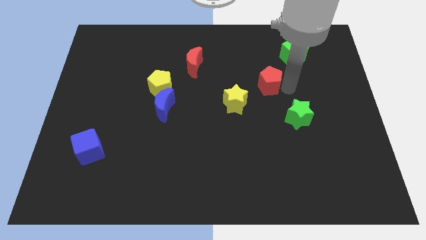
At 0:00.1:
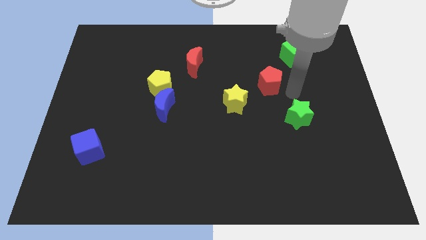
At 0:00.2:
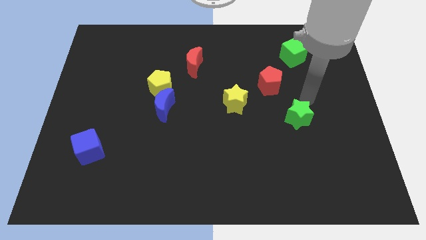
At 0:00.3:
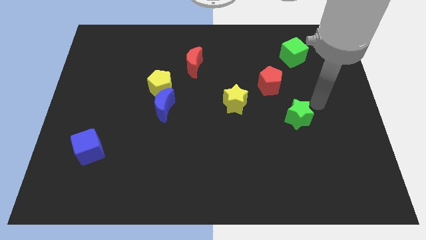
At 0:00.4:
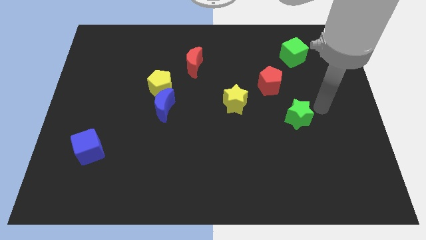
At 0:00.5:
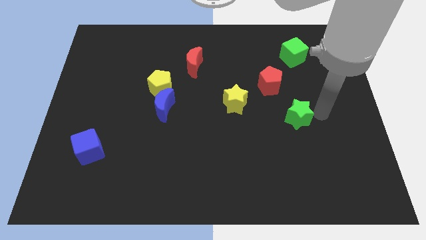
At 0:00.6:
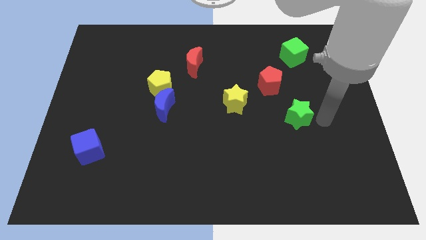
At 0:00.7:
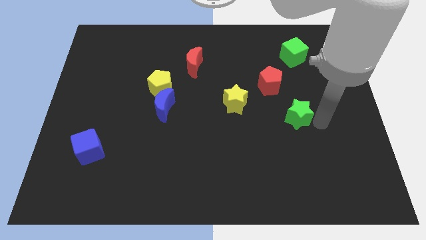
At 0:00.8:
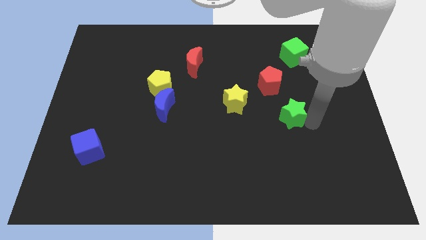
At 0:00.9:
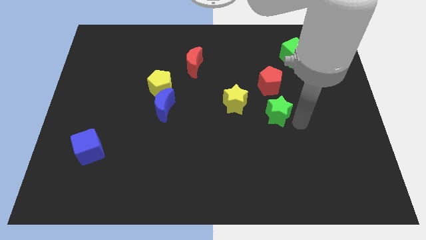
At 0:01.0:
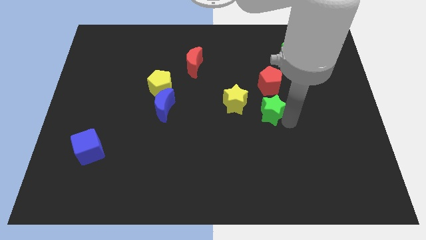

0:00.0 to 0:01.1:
move the green star below the red pentagon

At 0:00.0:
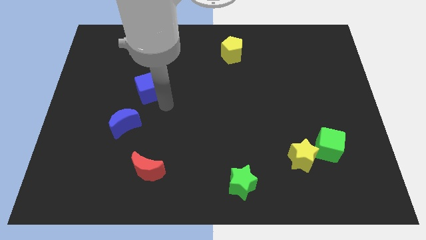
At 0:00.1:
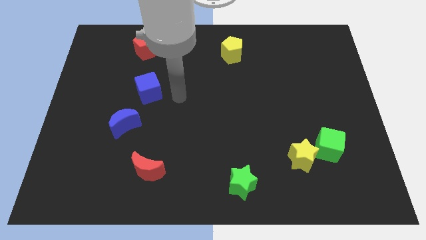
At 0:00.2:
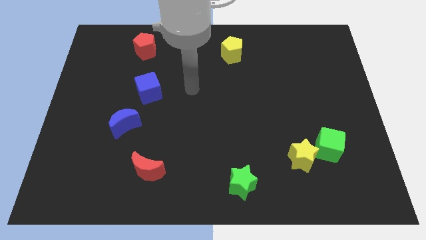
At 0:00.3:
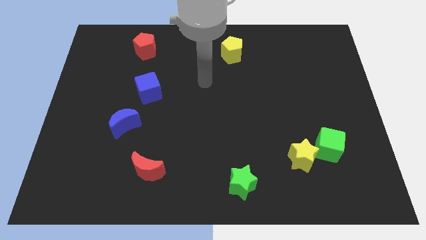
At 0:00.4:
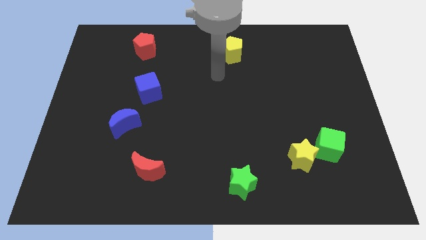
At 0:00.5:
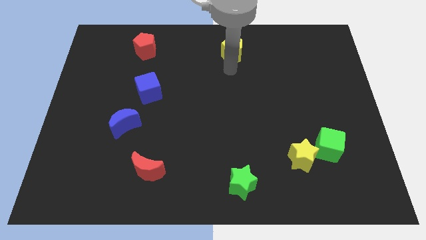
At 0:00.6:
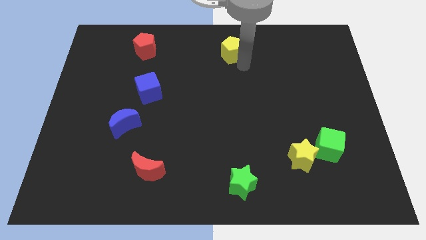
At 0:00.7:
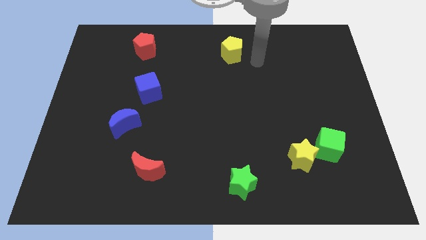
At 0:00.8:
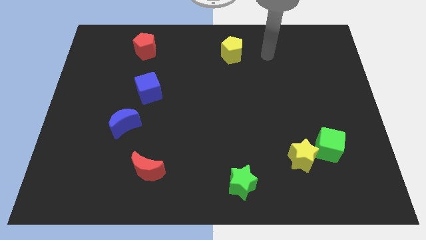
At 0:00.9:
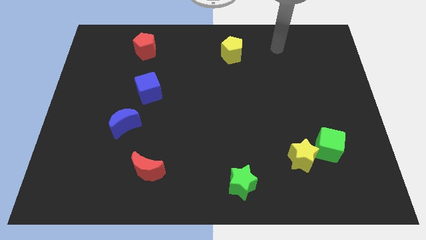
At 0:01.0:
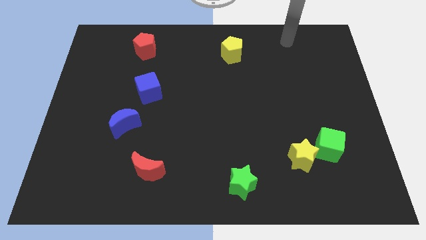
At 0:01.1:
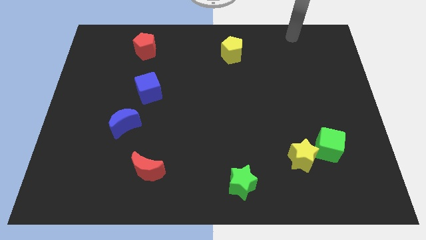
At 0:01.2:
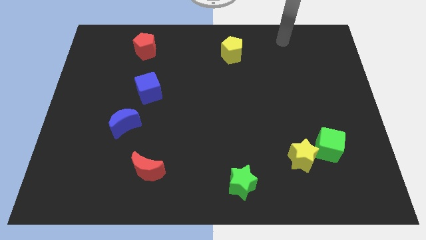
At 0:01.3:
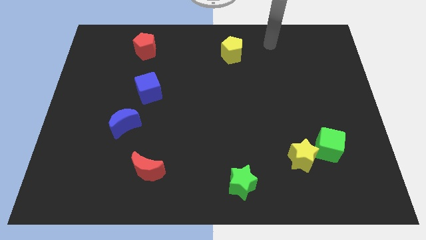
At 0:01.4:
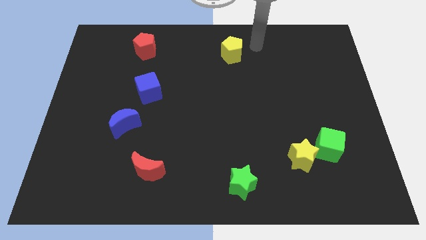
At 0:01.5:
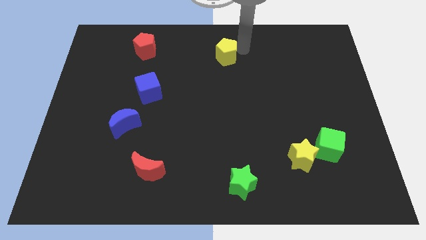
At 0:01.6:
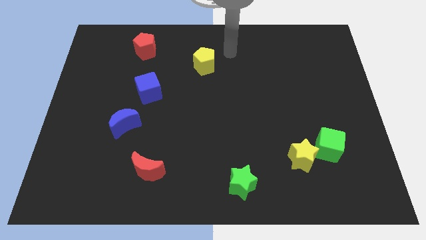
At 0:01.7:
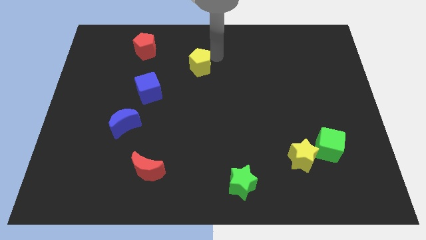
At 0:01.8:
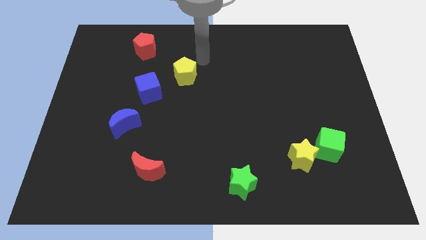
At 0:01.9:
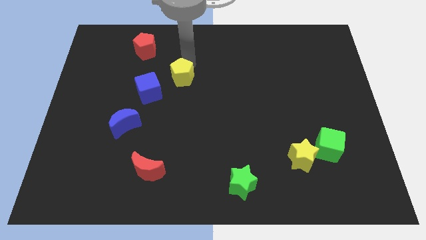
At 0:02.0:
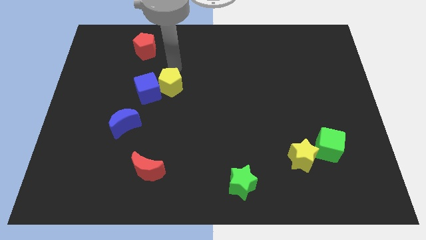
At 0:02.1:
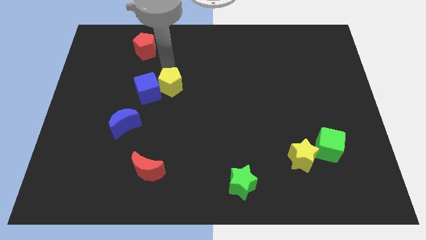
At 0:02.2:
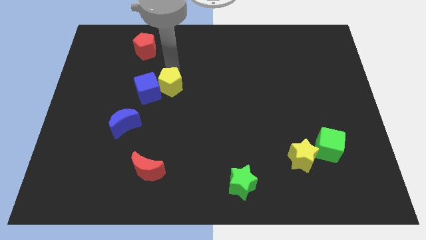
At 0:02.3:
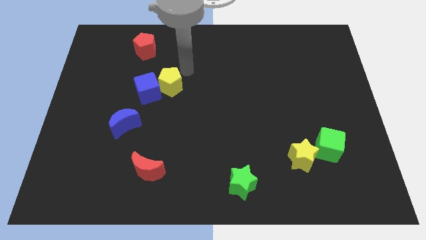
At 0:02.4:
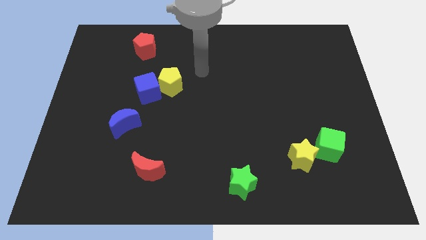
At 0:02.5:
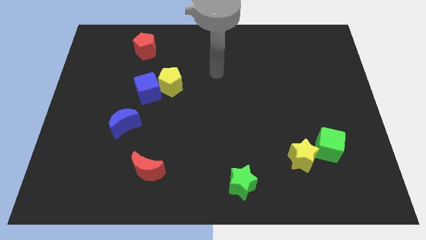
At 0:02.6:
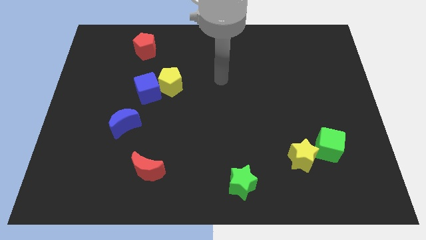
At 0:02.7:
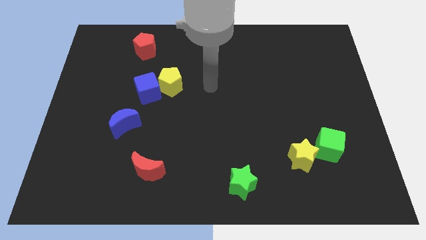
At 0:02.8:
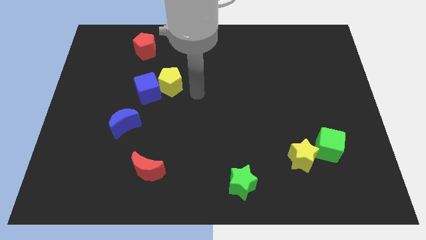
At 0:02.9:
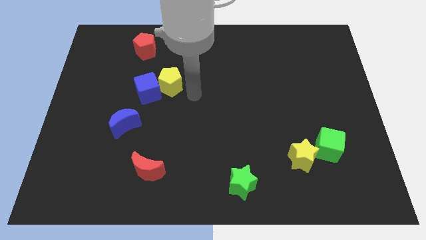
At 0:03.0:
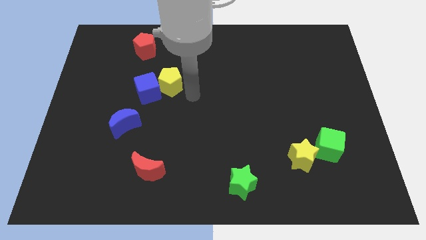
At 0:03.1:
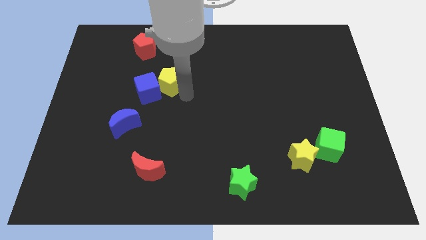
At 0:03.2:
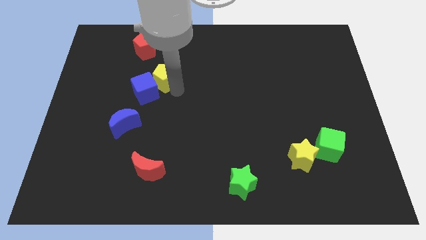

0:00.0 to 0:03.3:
push the yellow pentagon into the blue cube

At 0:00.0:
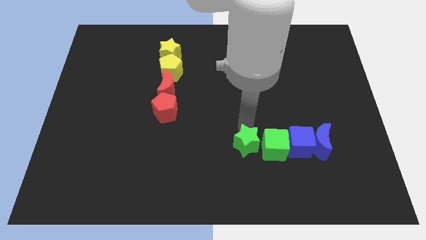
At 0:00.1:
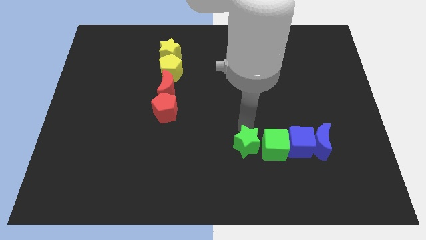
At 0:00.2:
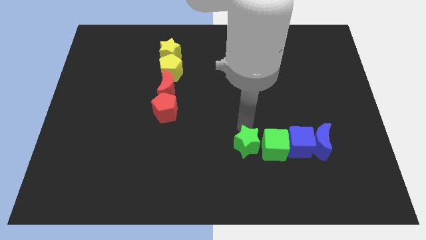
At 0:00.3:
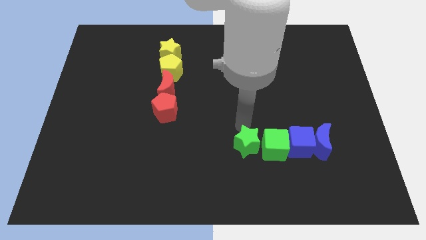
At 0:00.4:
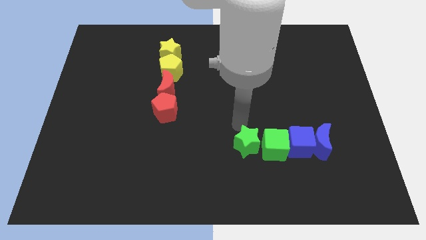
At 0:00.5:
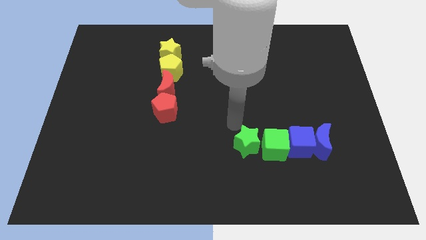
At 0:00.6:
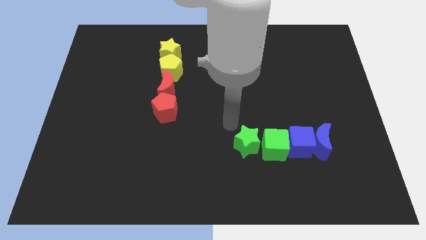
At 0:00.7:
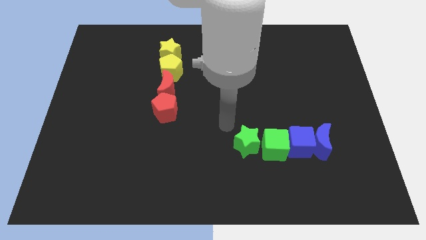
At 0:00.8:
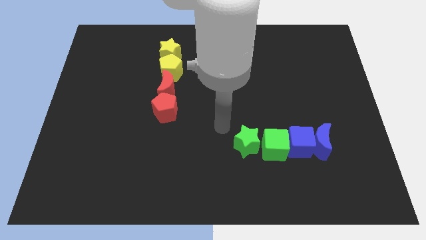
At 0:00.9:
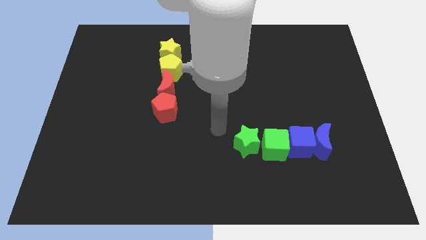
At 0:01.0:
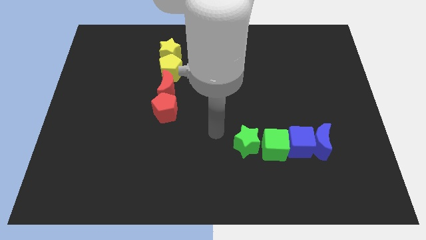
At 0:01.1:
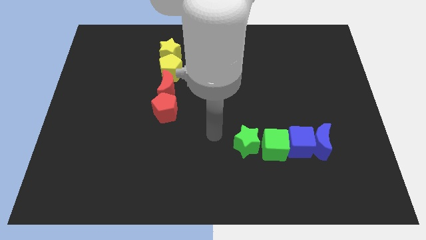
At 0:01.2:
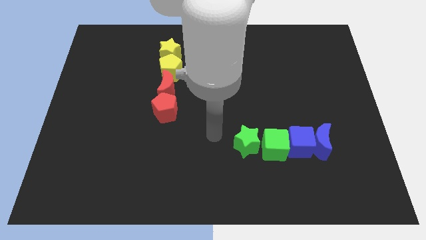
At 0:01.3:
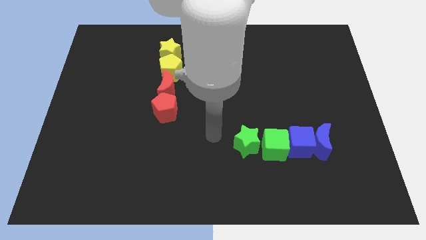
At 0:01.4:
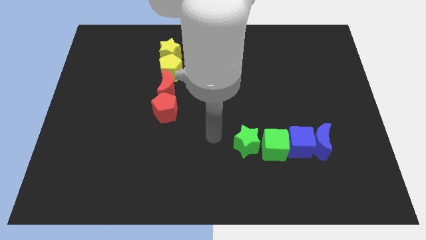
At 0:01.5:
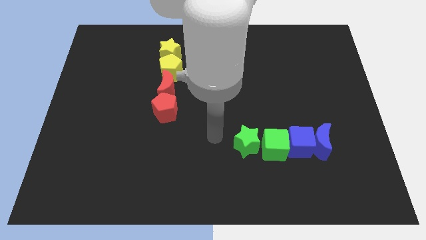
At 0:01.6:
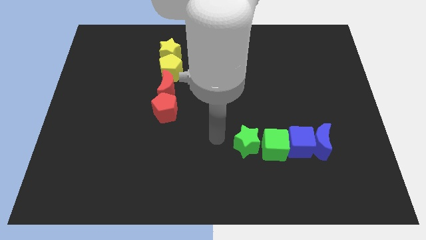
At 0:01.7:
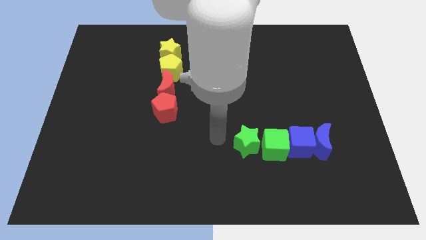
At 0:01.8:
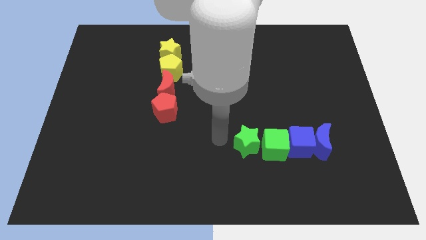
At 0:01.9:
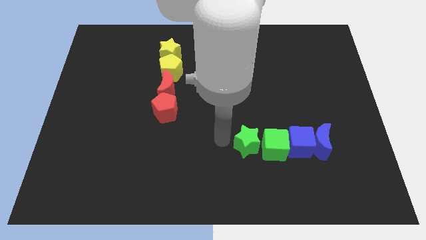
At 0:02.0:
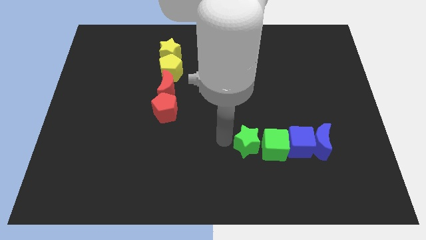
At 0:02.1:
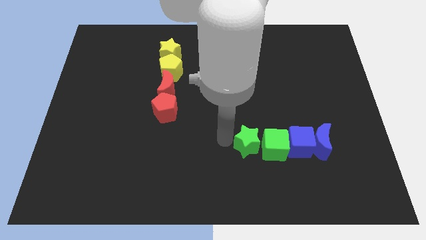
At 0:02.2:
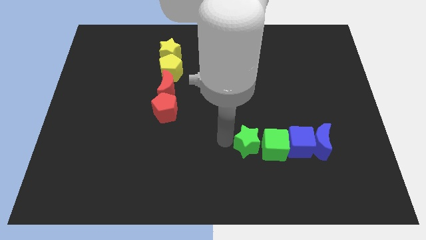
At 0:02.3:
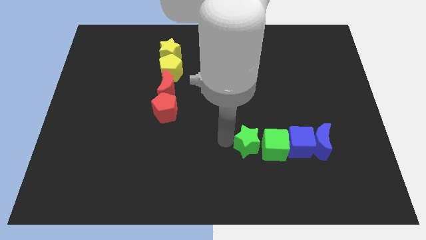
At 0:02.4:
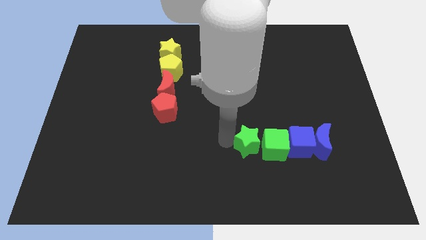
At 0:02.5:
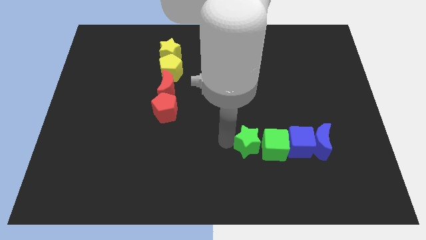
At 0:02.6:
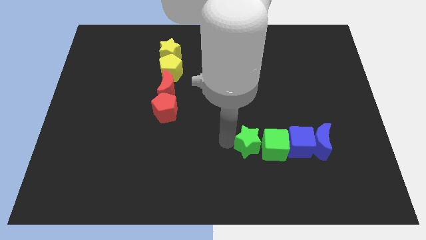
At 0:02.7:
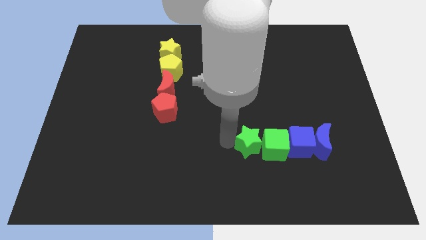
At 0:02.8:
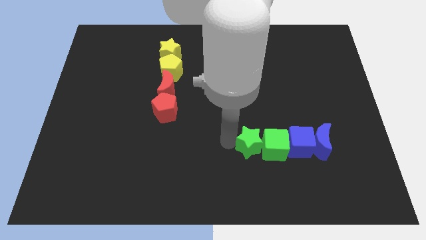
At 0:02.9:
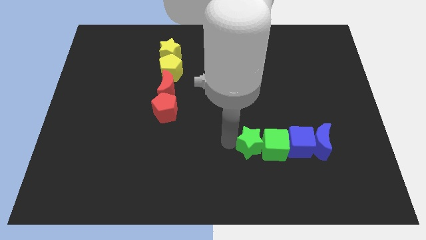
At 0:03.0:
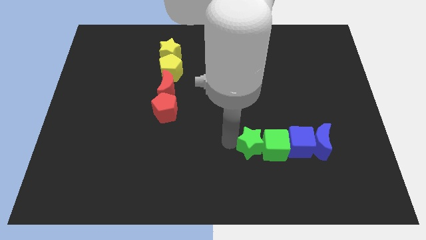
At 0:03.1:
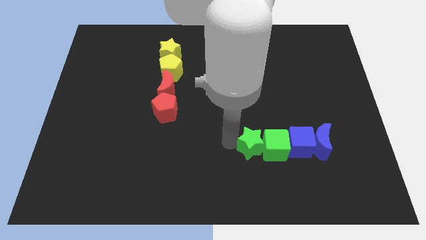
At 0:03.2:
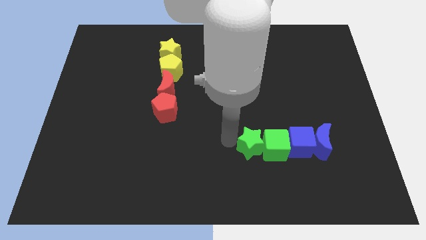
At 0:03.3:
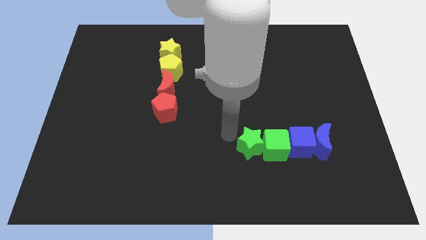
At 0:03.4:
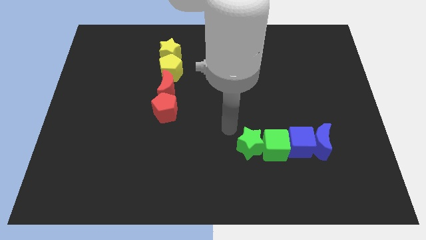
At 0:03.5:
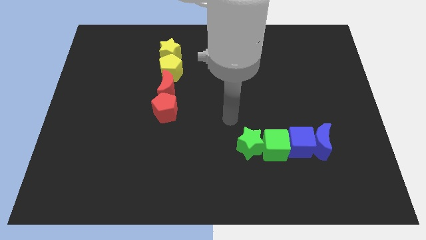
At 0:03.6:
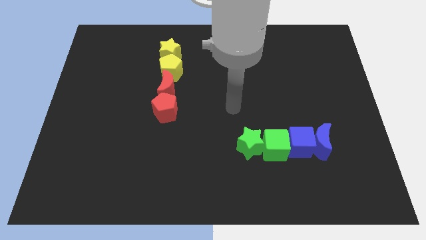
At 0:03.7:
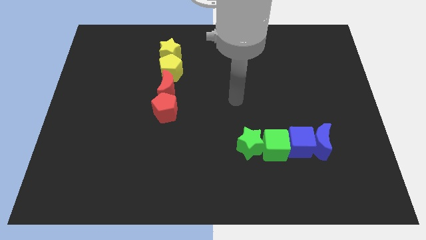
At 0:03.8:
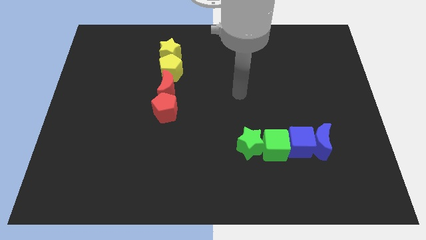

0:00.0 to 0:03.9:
slide green star close to the green cube

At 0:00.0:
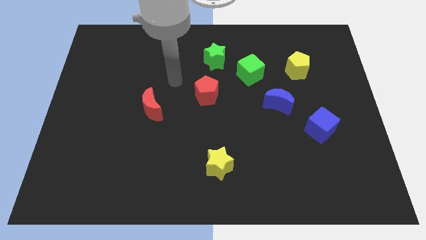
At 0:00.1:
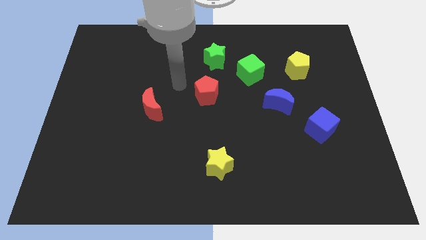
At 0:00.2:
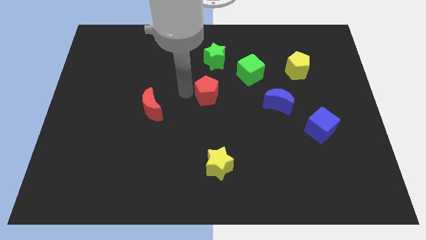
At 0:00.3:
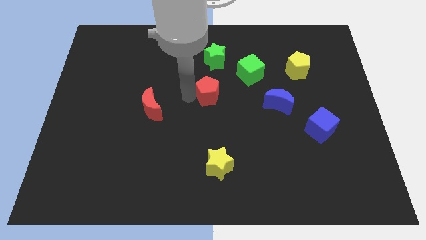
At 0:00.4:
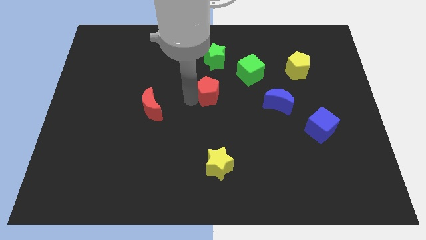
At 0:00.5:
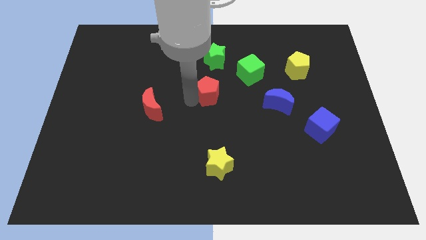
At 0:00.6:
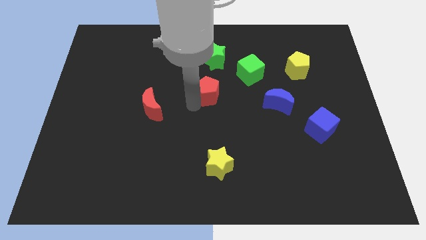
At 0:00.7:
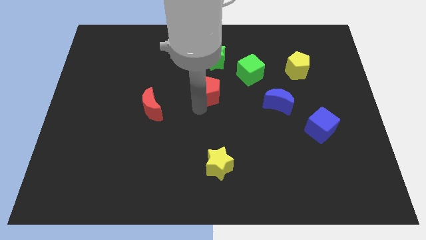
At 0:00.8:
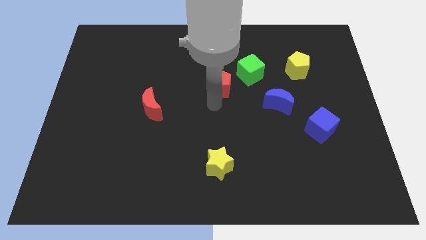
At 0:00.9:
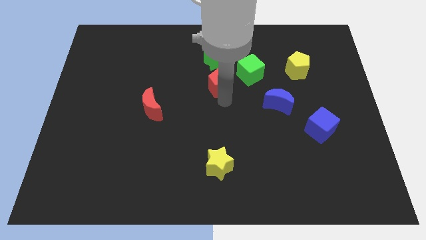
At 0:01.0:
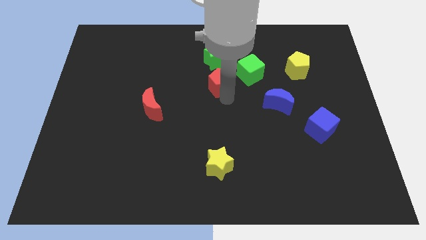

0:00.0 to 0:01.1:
push the red pentagon towards the green cube
